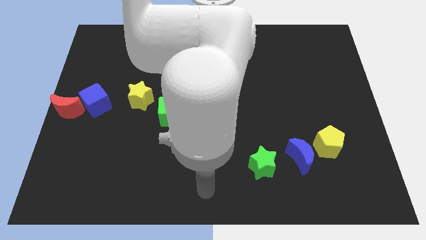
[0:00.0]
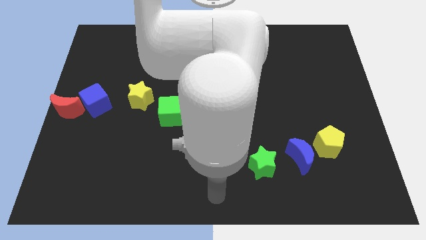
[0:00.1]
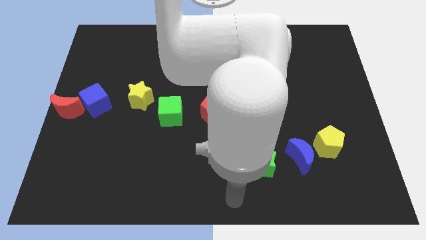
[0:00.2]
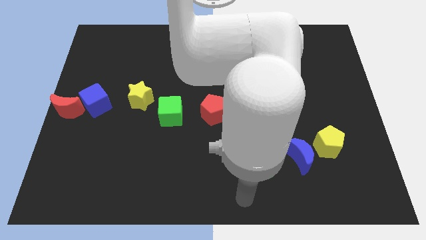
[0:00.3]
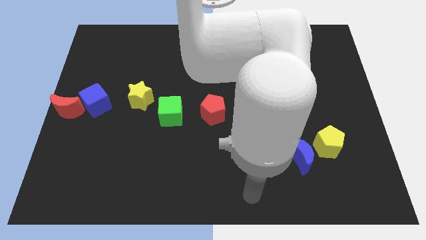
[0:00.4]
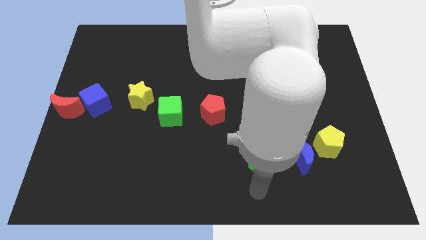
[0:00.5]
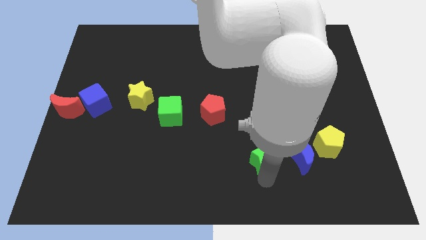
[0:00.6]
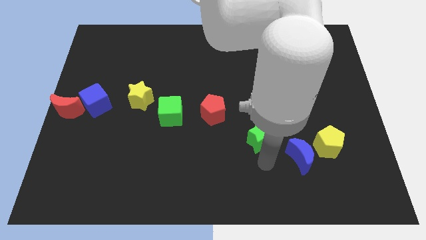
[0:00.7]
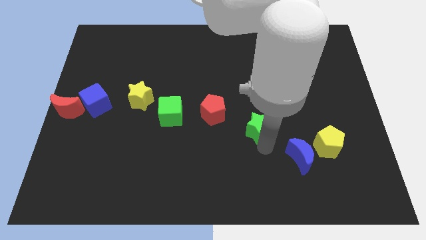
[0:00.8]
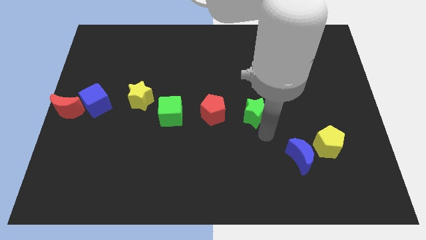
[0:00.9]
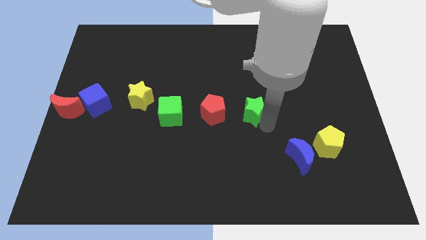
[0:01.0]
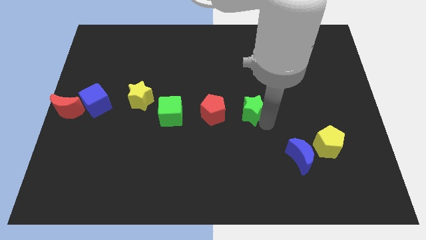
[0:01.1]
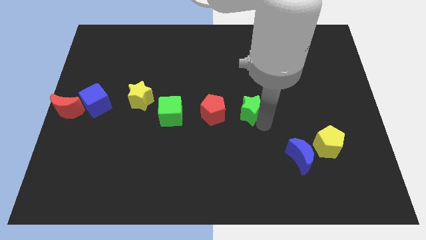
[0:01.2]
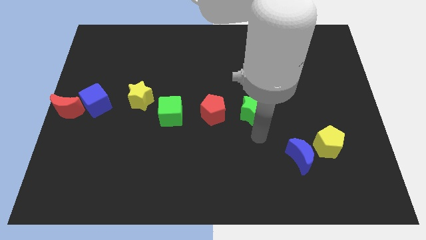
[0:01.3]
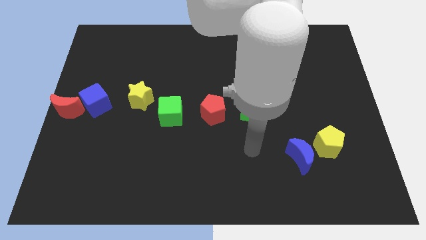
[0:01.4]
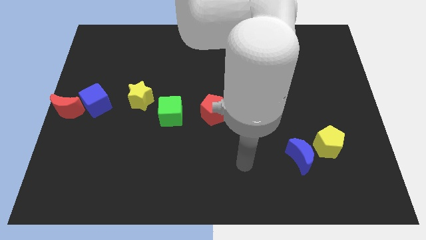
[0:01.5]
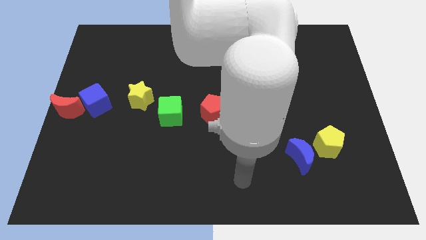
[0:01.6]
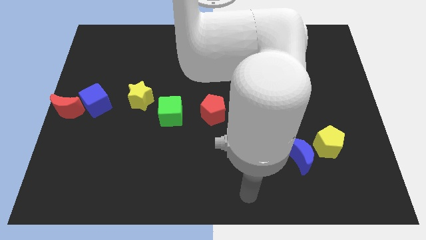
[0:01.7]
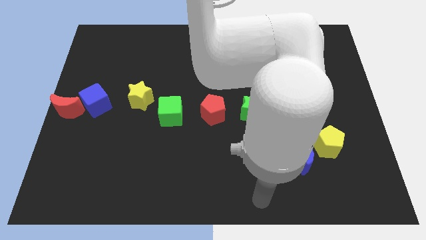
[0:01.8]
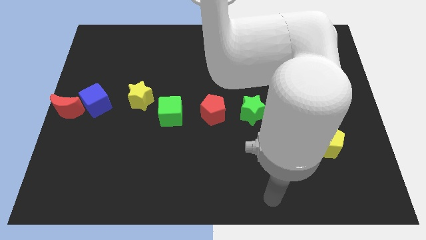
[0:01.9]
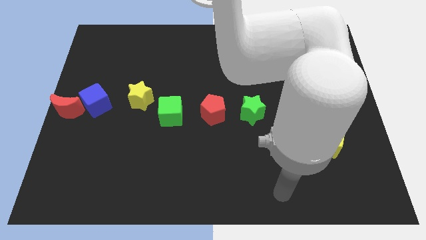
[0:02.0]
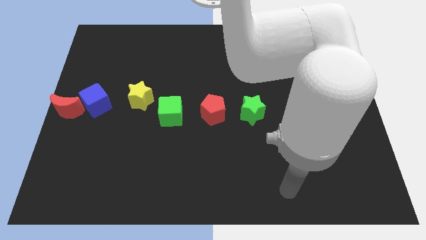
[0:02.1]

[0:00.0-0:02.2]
place green star to the right of red pentagon

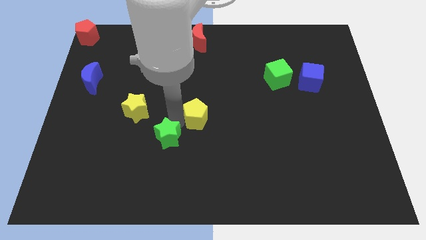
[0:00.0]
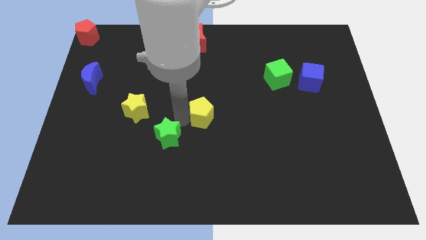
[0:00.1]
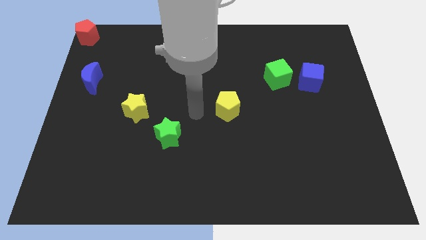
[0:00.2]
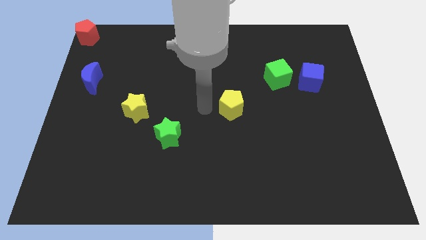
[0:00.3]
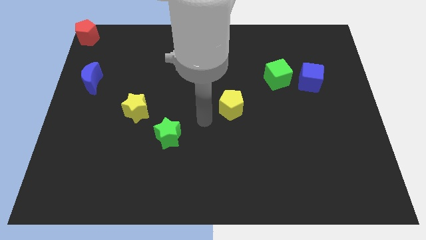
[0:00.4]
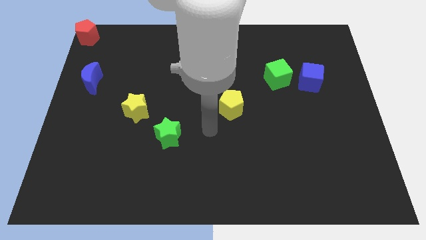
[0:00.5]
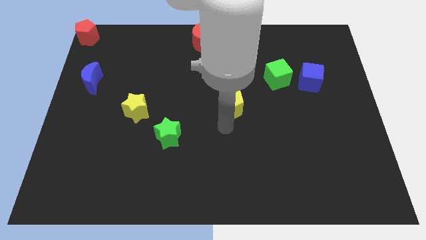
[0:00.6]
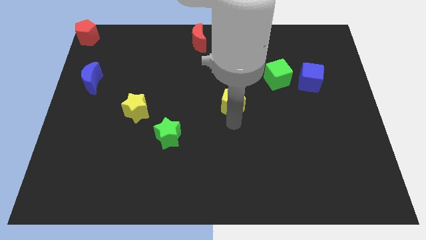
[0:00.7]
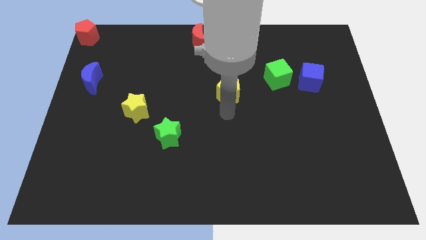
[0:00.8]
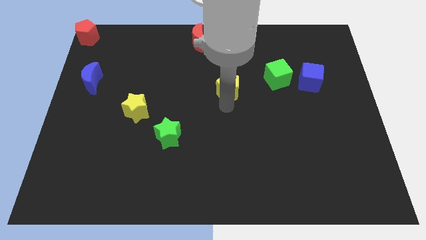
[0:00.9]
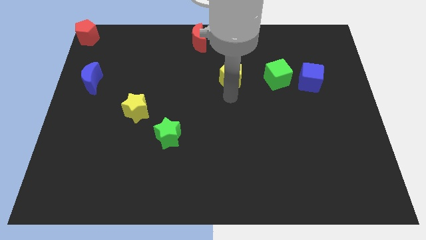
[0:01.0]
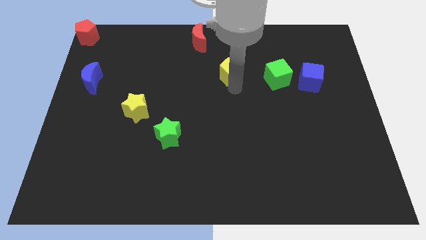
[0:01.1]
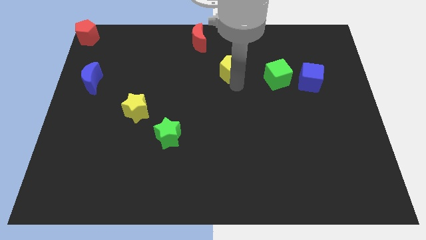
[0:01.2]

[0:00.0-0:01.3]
move the yellow pentagon to the left of the green cube

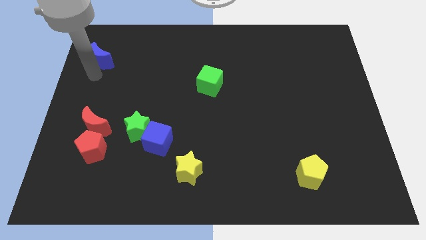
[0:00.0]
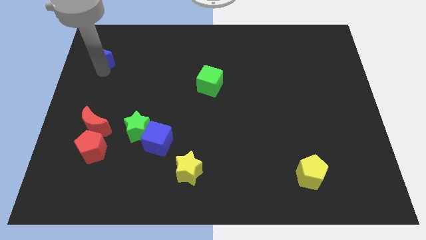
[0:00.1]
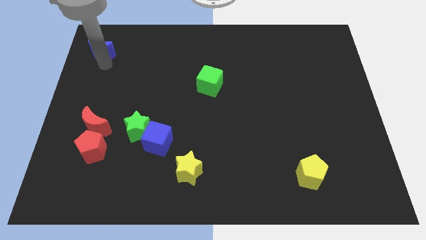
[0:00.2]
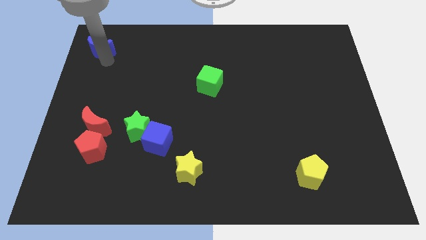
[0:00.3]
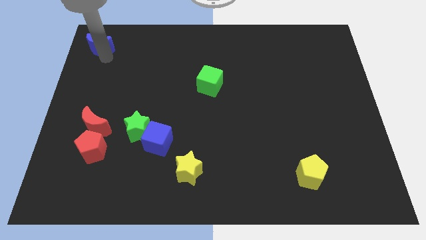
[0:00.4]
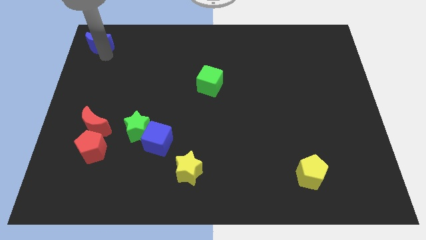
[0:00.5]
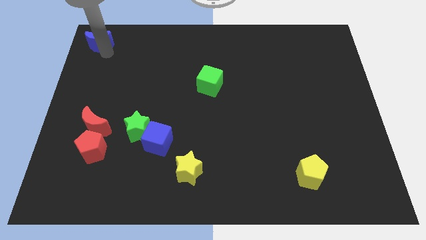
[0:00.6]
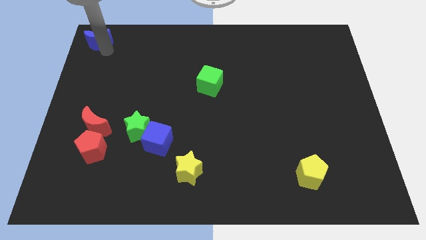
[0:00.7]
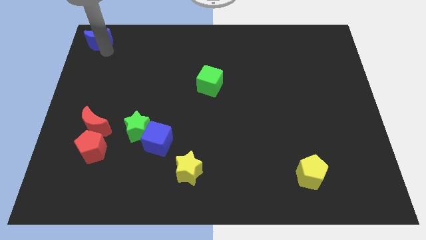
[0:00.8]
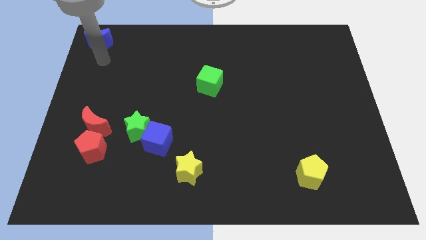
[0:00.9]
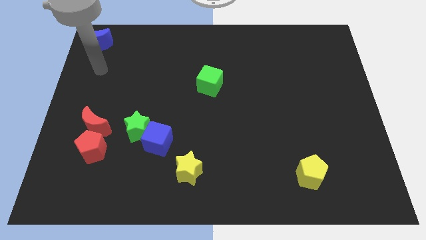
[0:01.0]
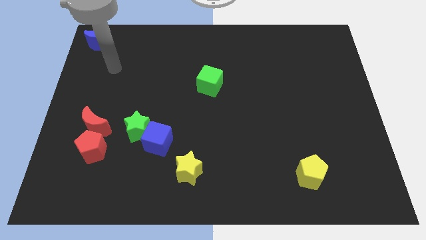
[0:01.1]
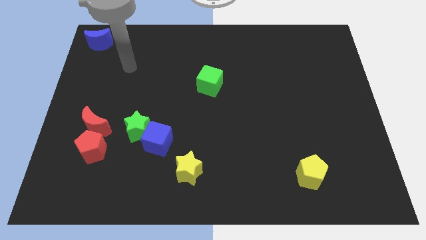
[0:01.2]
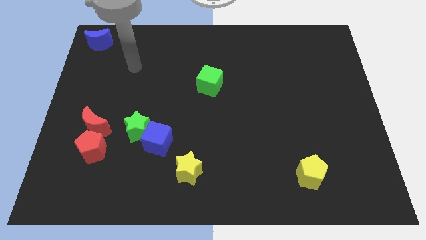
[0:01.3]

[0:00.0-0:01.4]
place the blue moon to the top left corner of the board

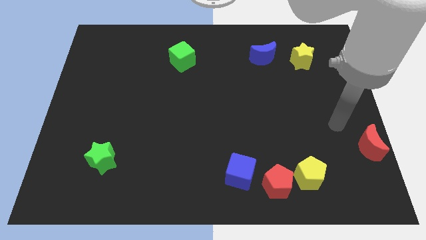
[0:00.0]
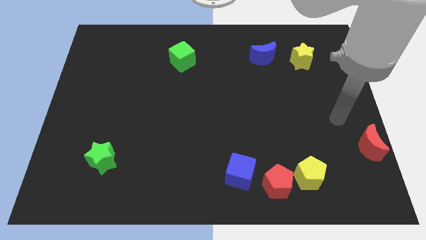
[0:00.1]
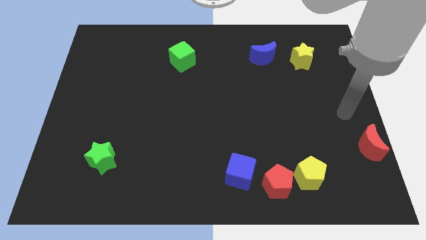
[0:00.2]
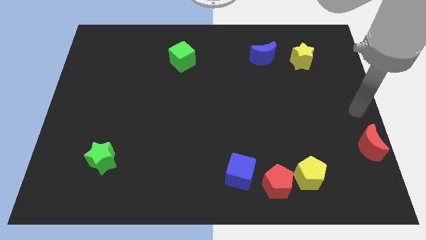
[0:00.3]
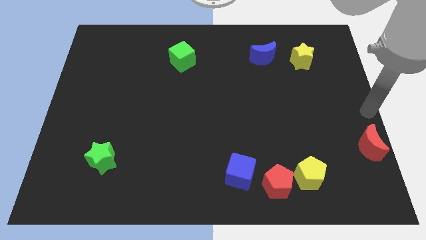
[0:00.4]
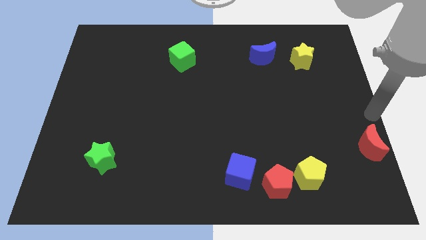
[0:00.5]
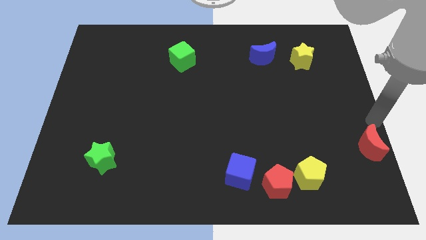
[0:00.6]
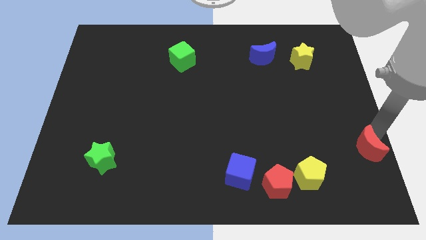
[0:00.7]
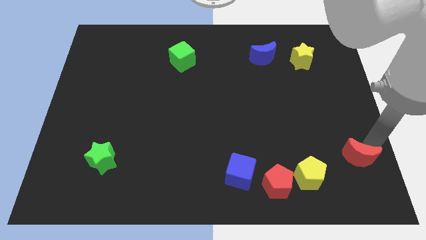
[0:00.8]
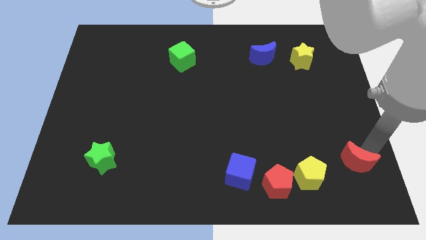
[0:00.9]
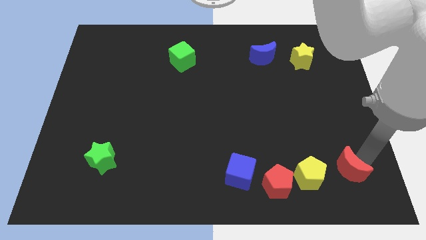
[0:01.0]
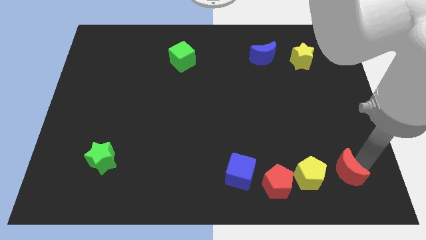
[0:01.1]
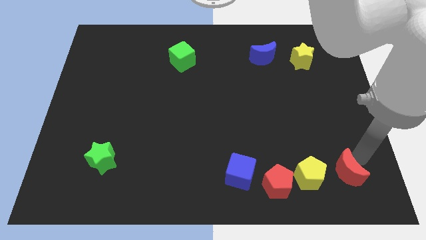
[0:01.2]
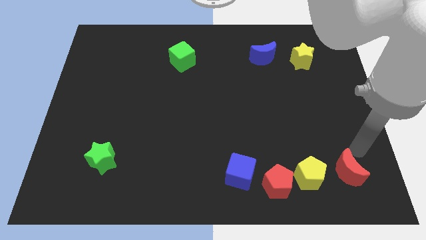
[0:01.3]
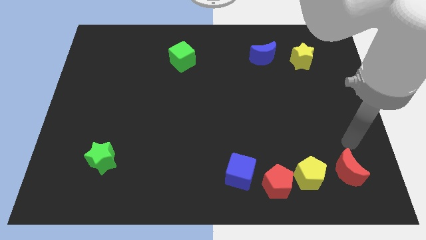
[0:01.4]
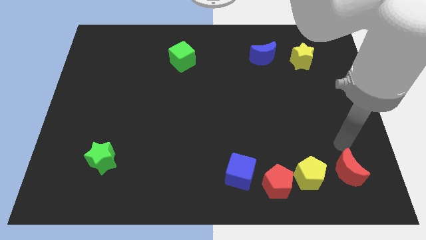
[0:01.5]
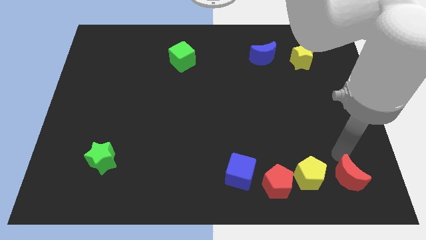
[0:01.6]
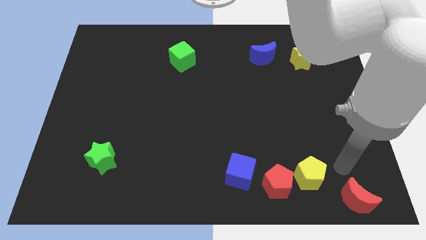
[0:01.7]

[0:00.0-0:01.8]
slide the red moon to the right of the yellow pentagon

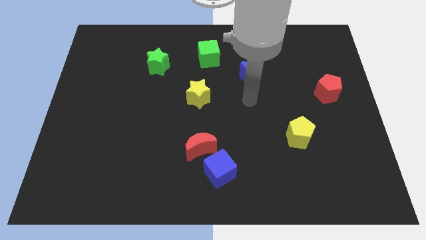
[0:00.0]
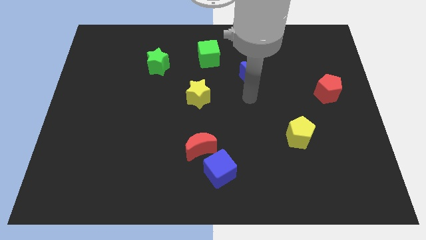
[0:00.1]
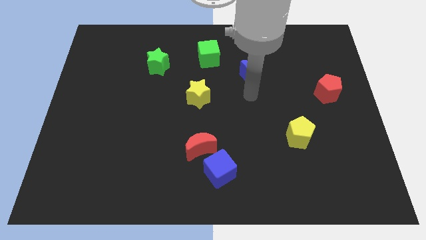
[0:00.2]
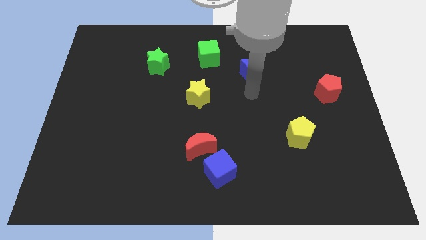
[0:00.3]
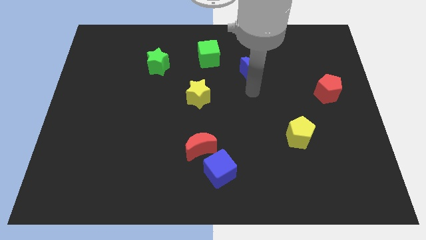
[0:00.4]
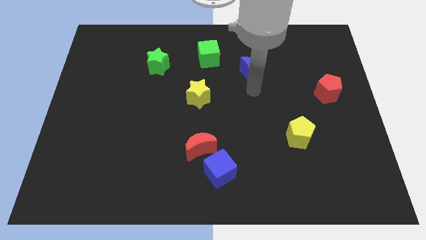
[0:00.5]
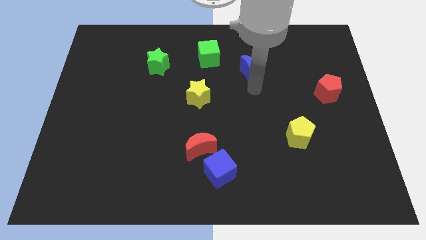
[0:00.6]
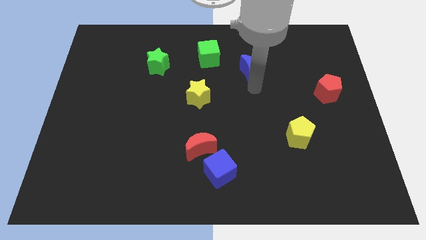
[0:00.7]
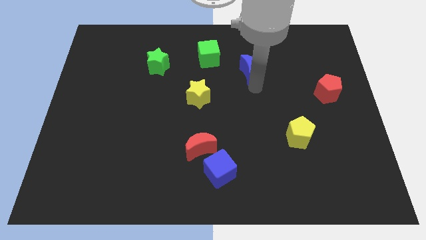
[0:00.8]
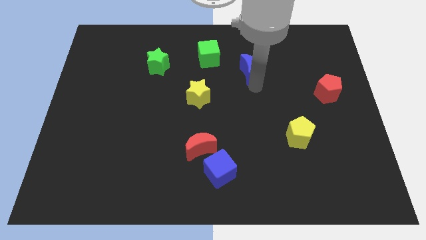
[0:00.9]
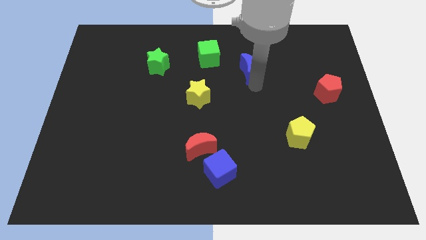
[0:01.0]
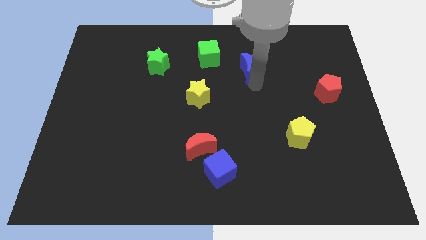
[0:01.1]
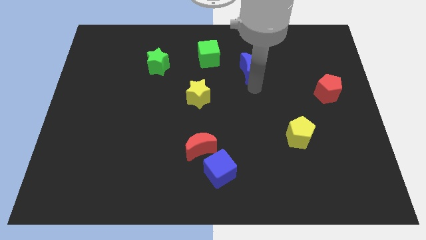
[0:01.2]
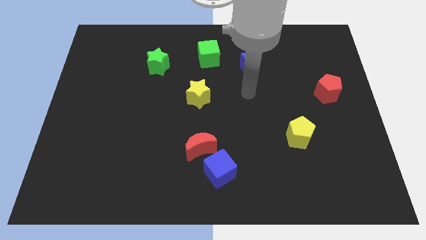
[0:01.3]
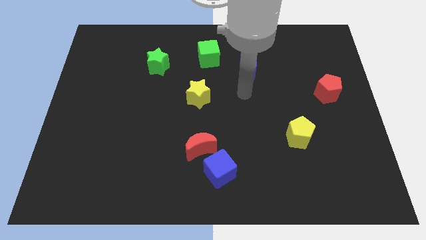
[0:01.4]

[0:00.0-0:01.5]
place the blue moon between the yellow star and green cube

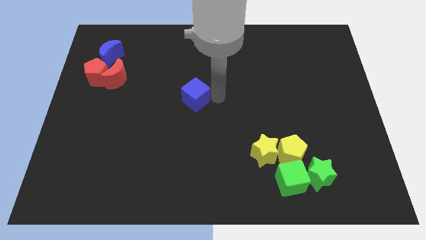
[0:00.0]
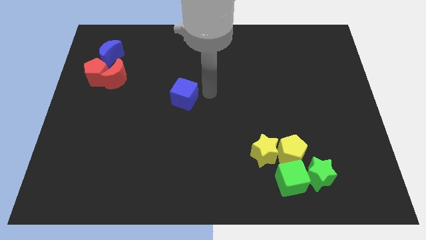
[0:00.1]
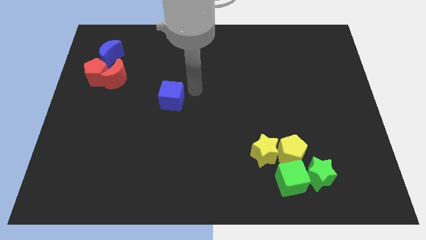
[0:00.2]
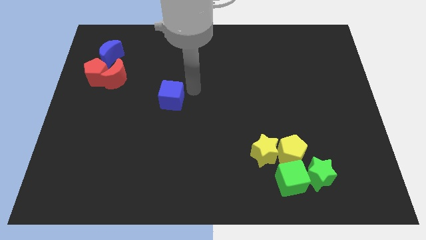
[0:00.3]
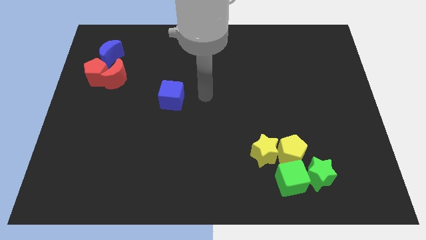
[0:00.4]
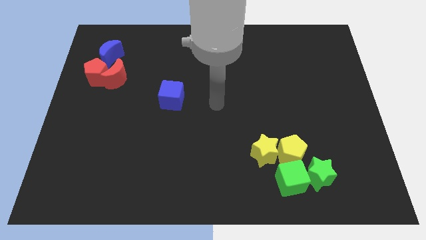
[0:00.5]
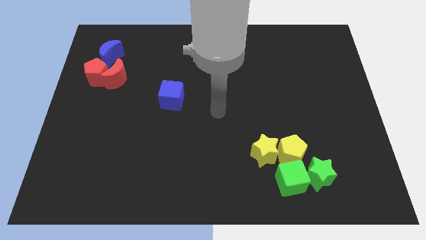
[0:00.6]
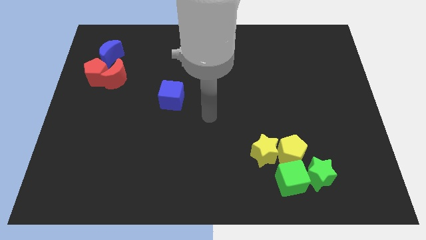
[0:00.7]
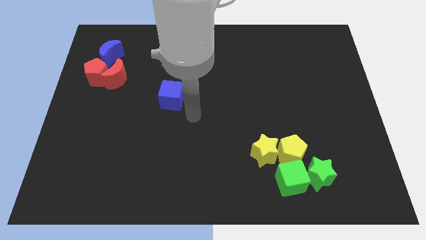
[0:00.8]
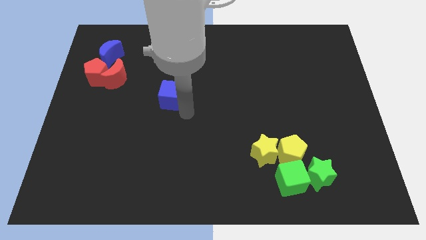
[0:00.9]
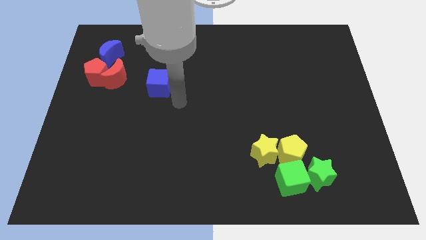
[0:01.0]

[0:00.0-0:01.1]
move blue cube towards red moon
